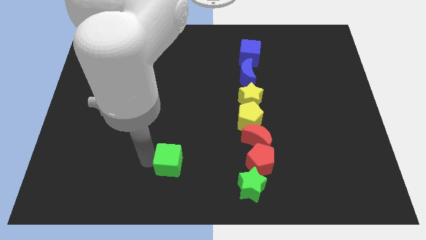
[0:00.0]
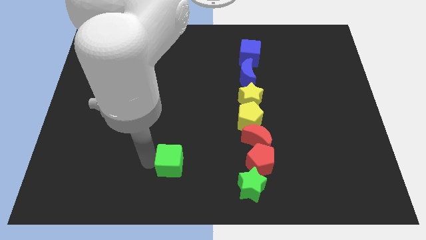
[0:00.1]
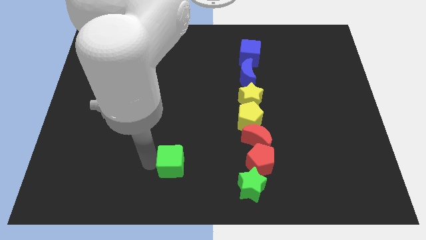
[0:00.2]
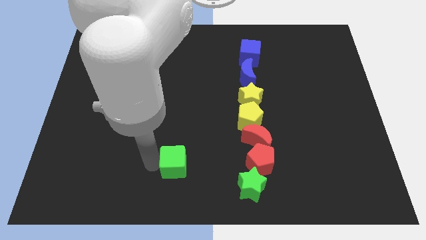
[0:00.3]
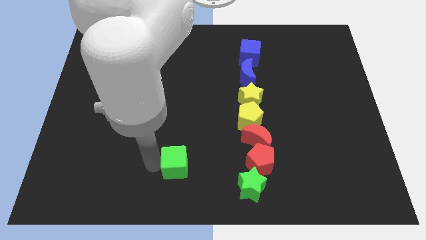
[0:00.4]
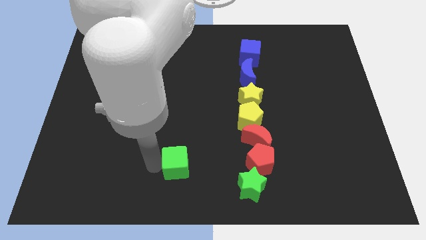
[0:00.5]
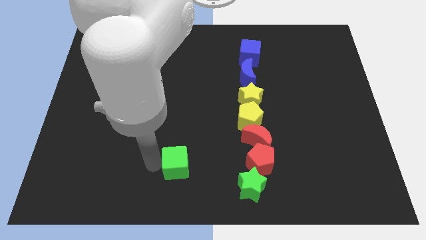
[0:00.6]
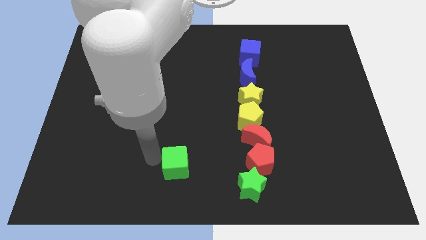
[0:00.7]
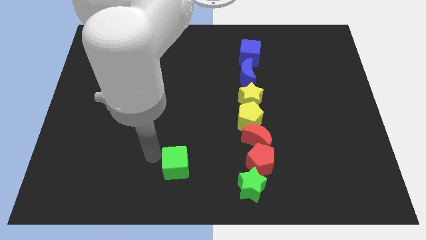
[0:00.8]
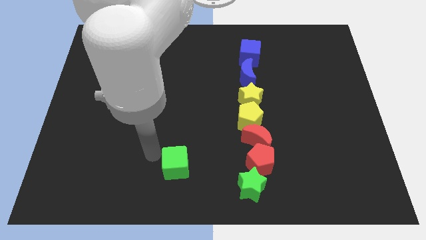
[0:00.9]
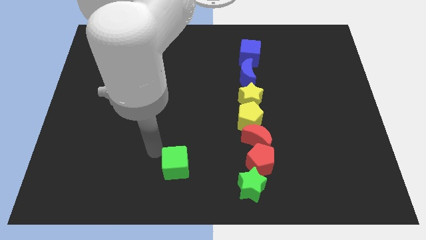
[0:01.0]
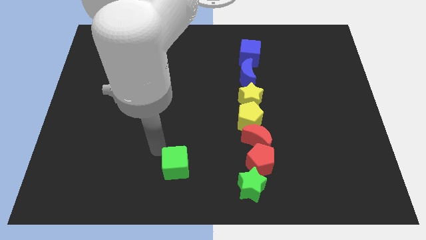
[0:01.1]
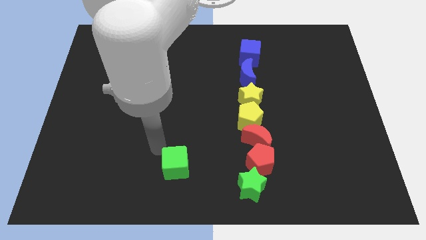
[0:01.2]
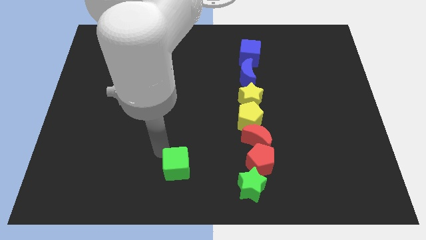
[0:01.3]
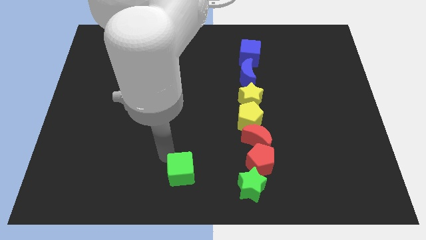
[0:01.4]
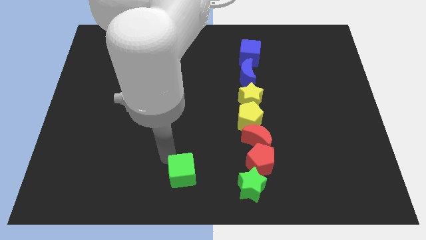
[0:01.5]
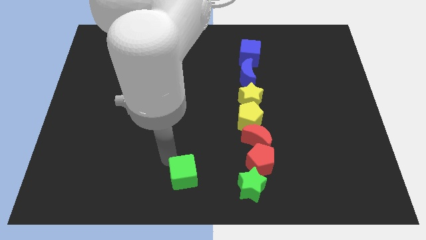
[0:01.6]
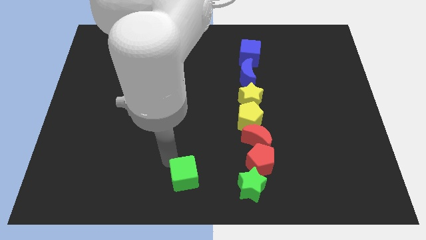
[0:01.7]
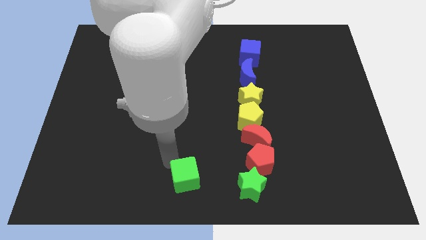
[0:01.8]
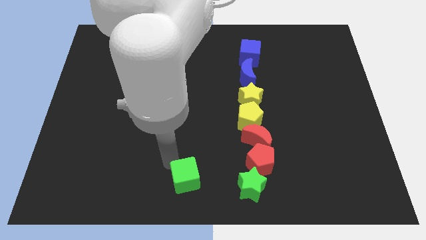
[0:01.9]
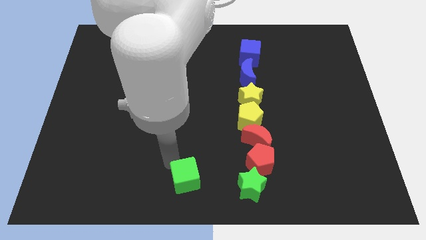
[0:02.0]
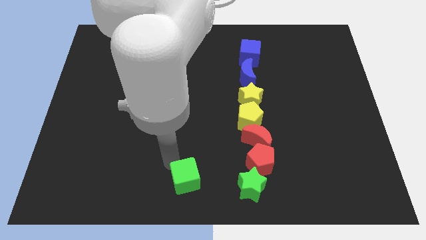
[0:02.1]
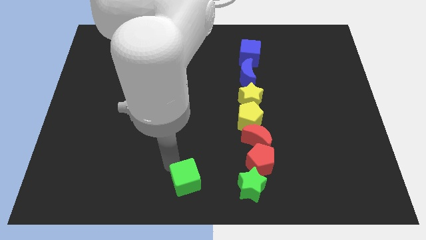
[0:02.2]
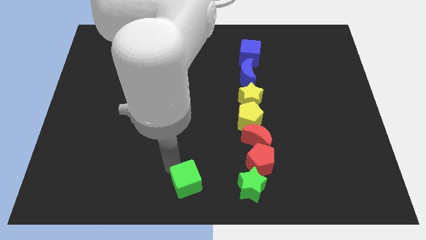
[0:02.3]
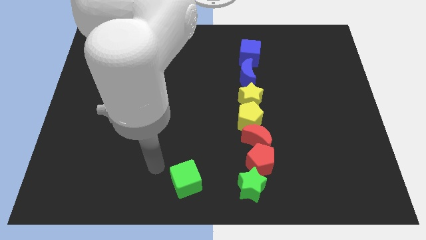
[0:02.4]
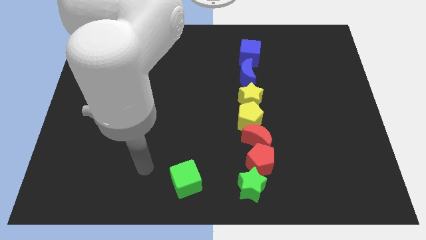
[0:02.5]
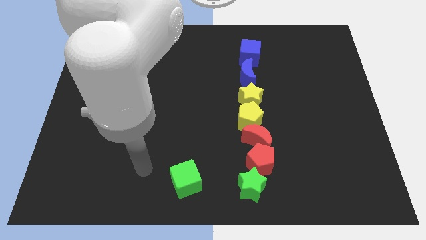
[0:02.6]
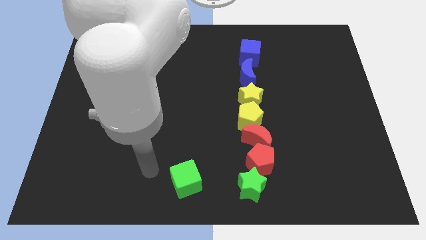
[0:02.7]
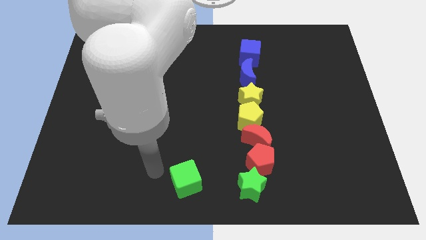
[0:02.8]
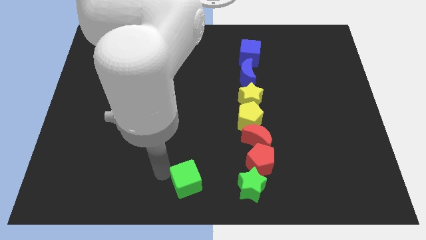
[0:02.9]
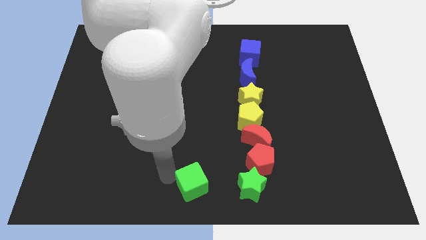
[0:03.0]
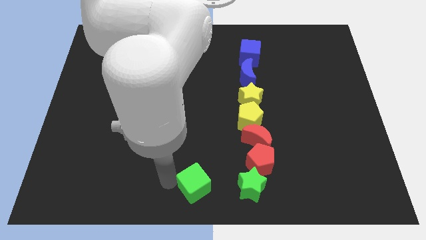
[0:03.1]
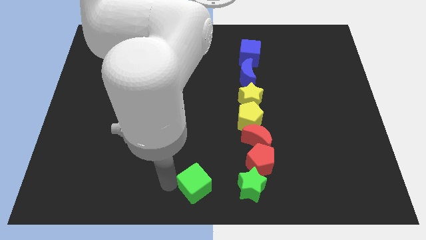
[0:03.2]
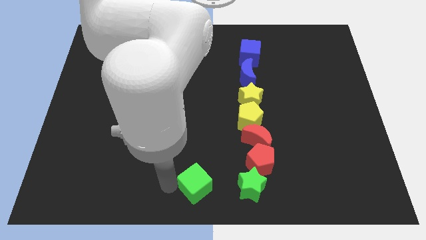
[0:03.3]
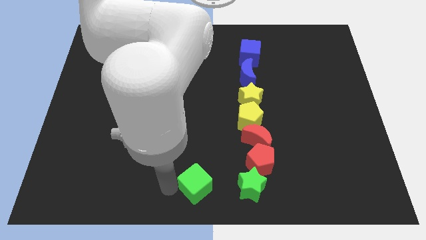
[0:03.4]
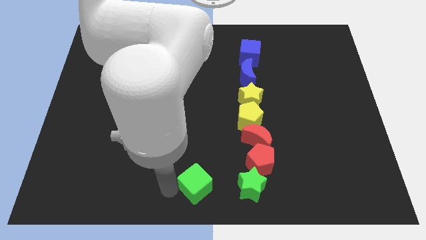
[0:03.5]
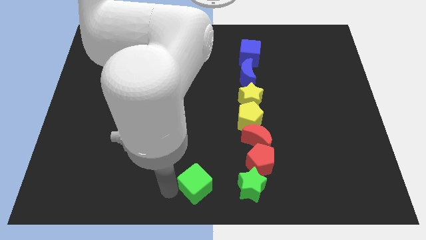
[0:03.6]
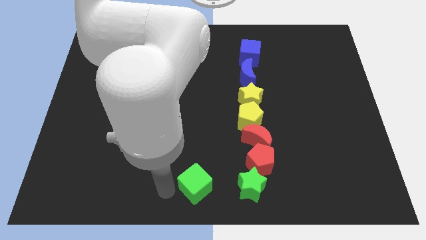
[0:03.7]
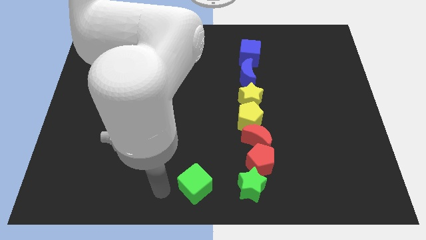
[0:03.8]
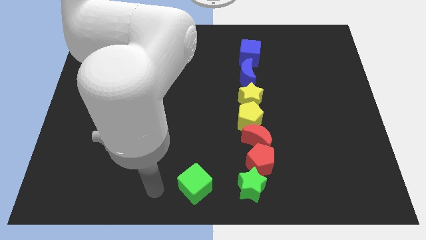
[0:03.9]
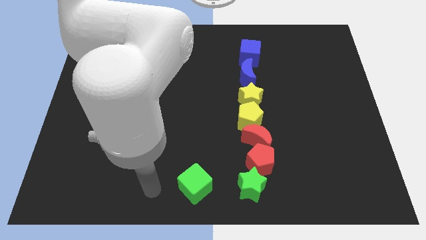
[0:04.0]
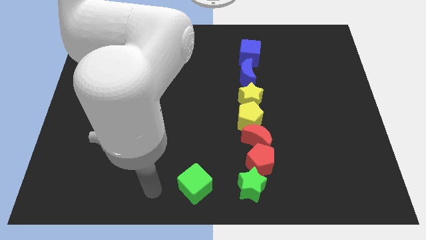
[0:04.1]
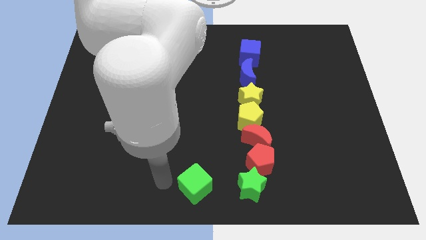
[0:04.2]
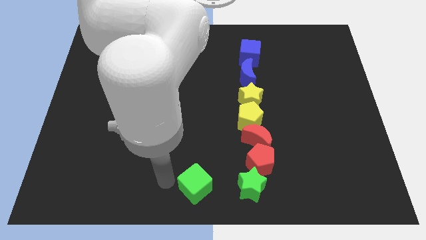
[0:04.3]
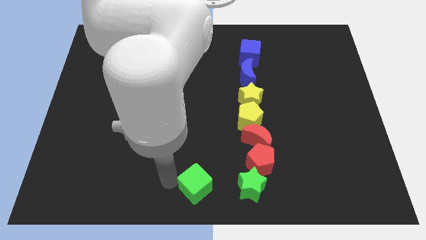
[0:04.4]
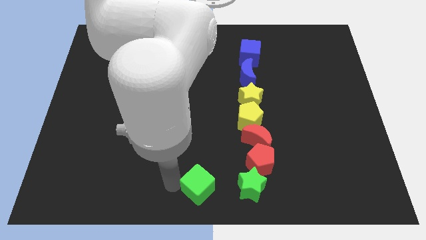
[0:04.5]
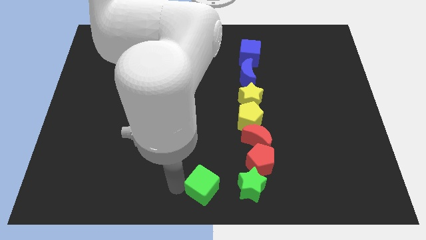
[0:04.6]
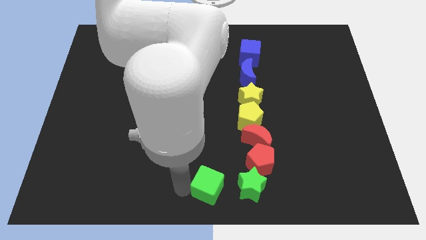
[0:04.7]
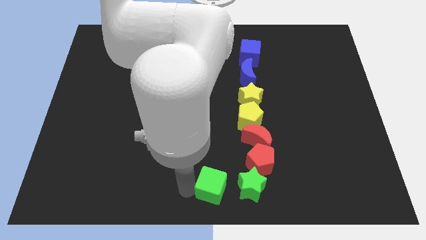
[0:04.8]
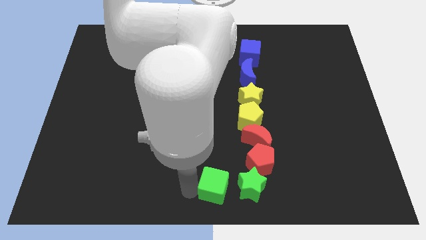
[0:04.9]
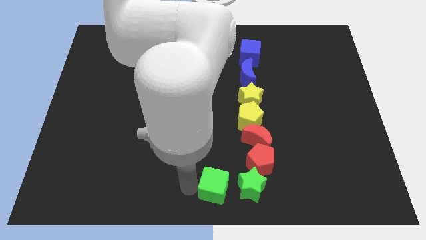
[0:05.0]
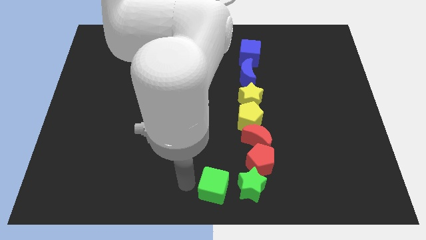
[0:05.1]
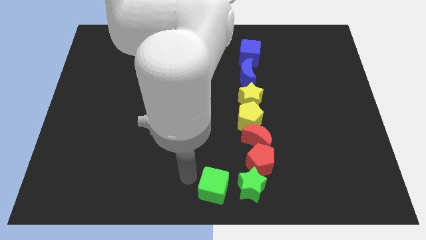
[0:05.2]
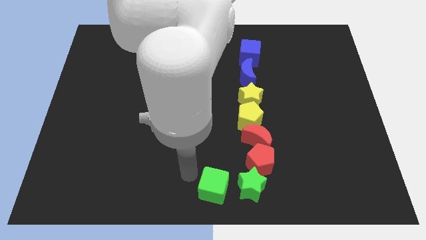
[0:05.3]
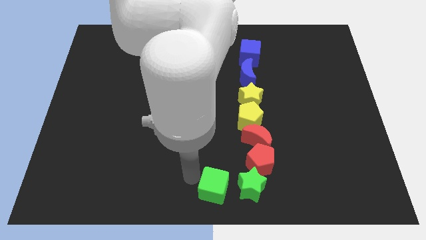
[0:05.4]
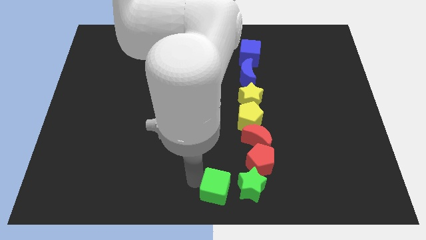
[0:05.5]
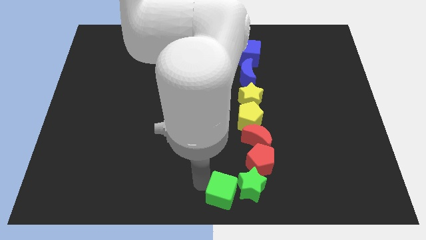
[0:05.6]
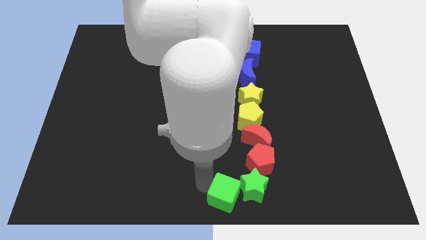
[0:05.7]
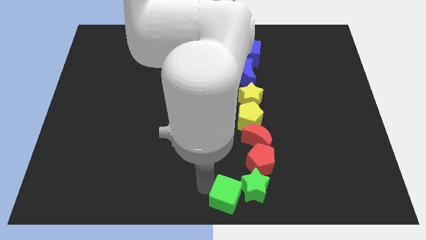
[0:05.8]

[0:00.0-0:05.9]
drag the green cube into the left side of the green star

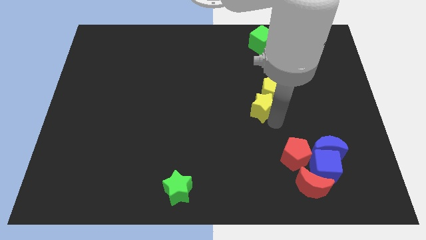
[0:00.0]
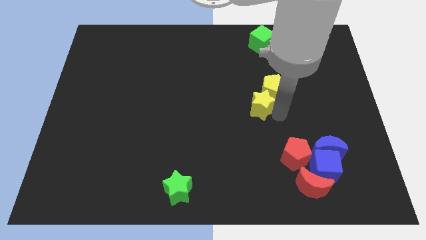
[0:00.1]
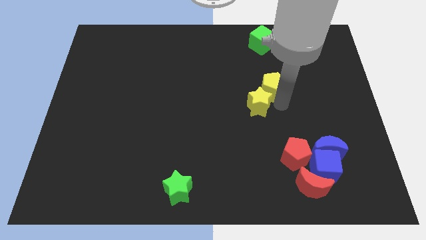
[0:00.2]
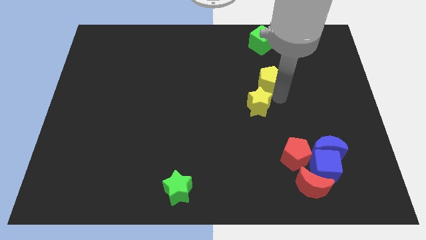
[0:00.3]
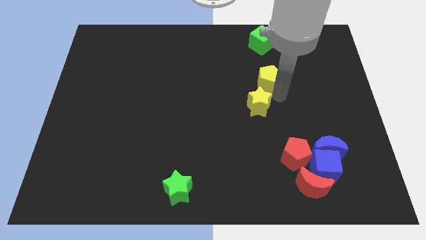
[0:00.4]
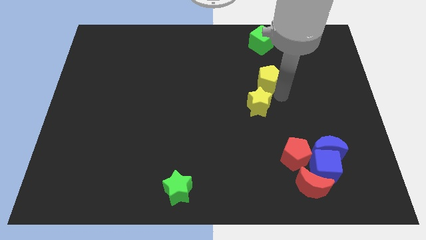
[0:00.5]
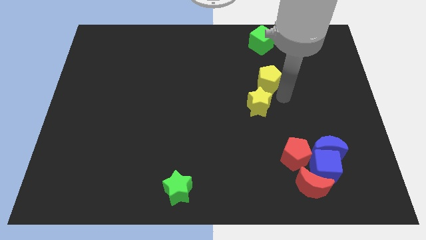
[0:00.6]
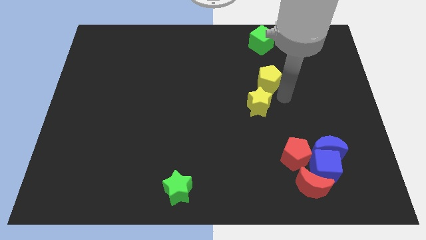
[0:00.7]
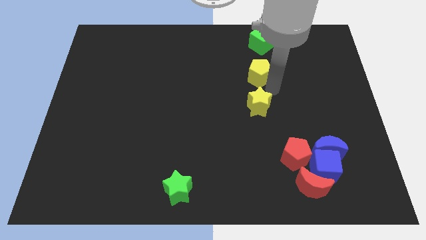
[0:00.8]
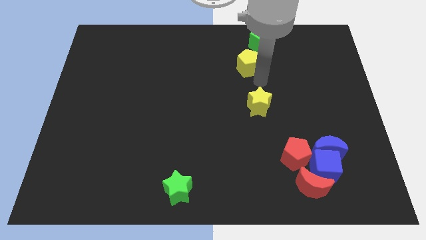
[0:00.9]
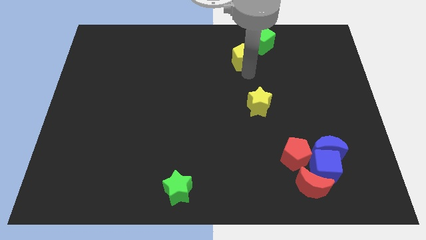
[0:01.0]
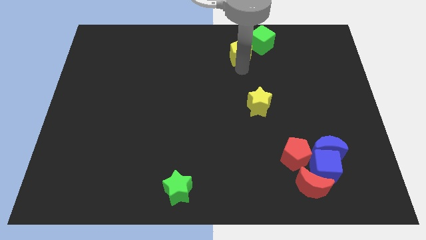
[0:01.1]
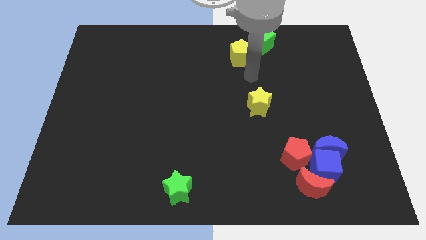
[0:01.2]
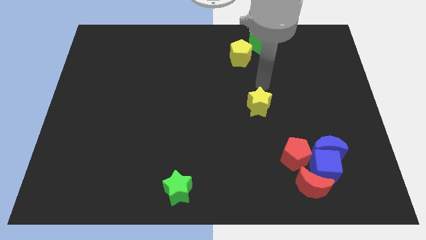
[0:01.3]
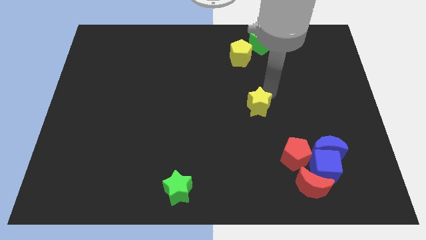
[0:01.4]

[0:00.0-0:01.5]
push the yellow pentagon to the bottom left side of the green cube

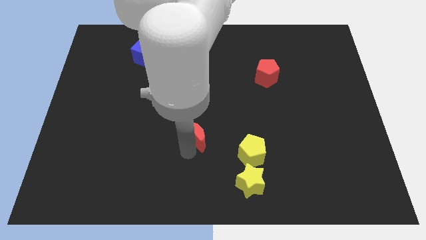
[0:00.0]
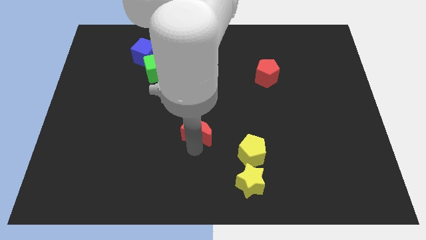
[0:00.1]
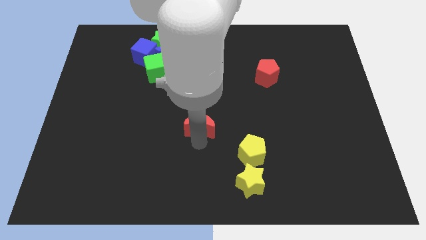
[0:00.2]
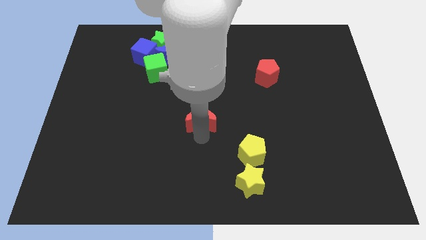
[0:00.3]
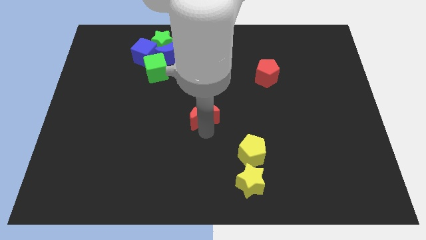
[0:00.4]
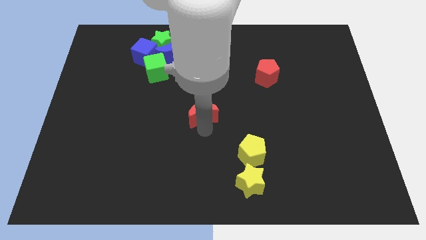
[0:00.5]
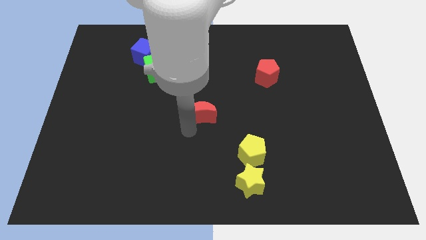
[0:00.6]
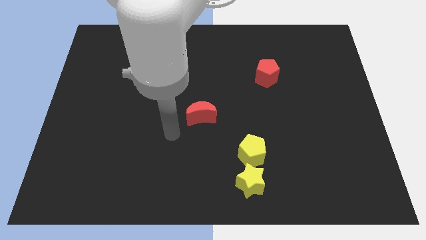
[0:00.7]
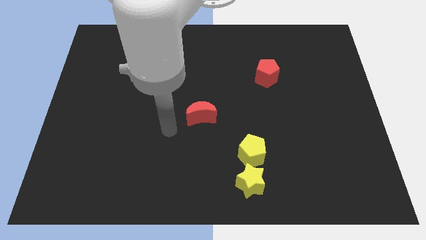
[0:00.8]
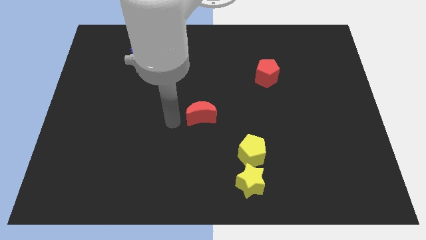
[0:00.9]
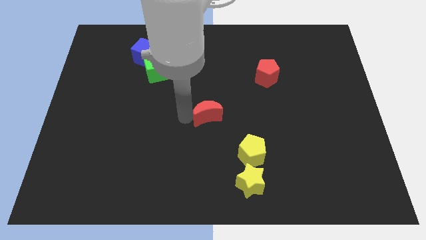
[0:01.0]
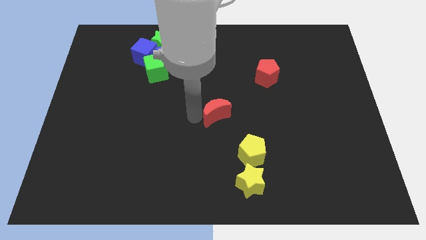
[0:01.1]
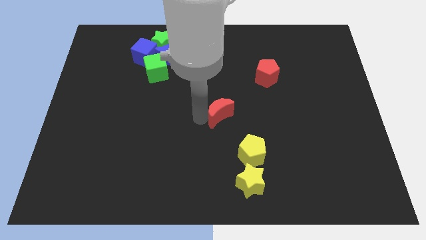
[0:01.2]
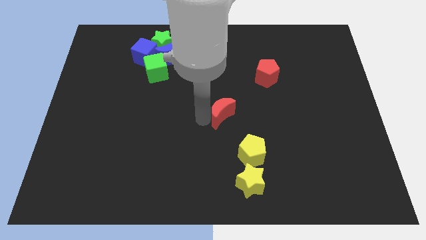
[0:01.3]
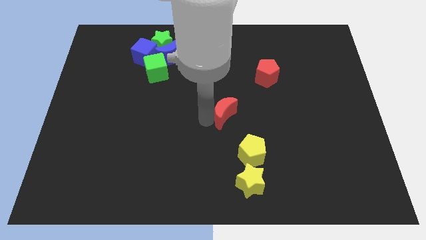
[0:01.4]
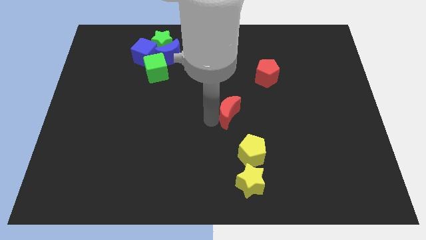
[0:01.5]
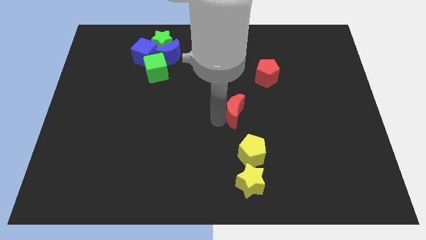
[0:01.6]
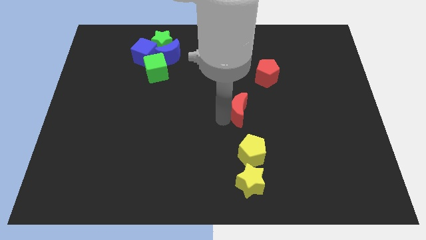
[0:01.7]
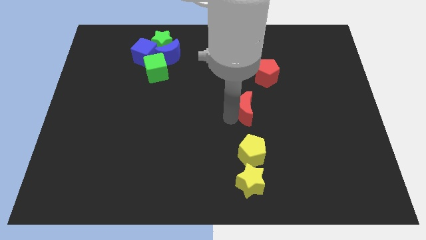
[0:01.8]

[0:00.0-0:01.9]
move the red moon towards the right
